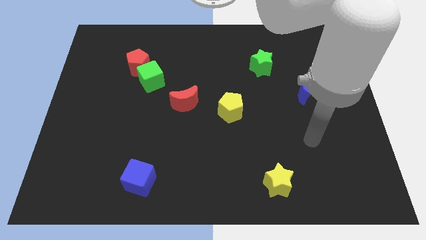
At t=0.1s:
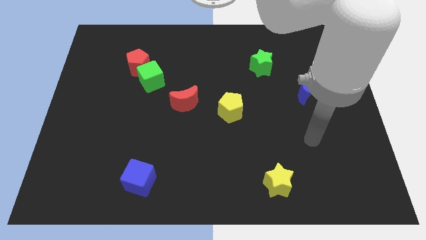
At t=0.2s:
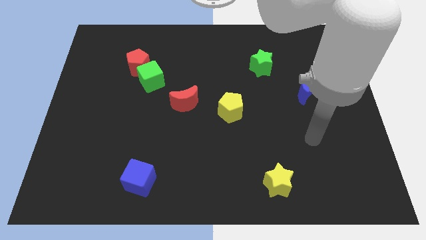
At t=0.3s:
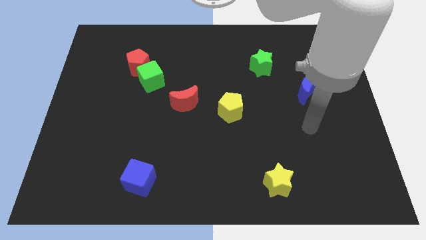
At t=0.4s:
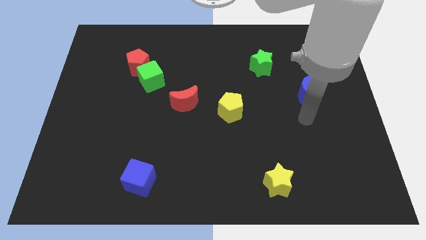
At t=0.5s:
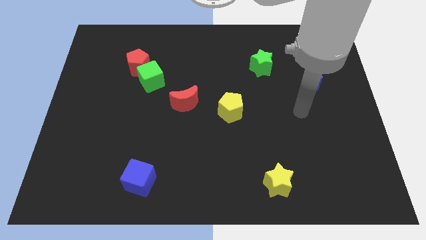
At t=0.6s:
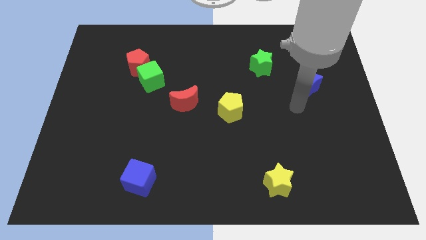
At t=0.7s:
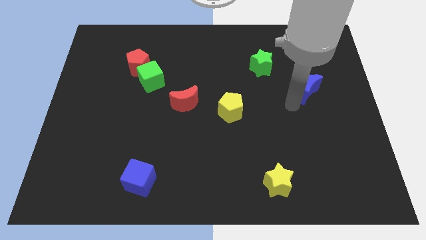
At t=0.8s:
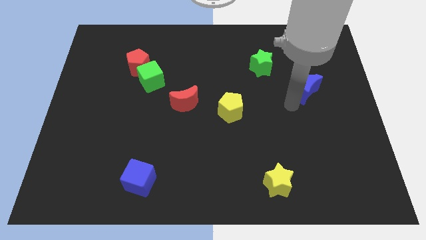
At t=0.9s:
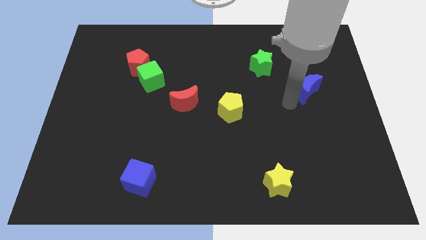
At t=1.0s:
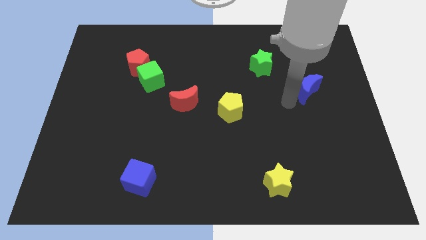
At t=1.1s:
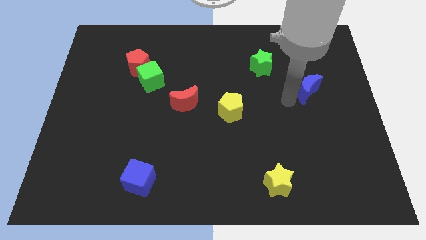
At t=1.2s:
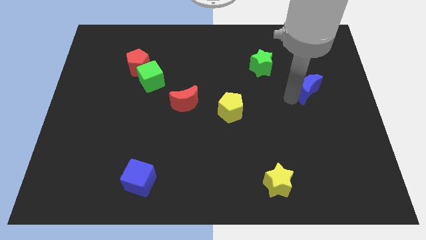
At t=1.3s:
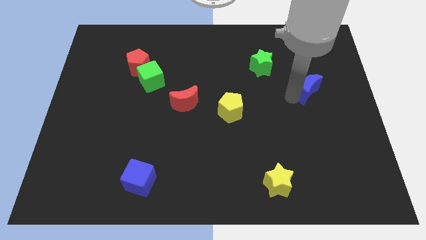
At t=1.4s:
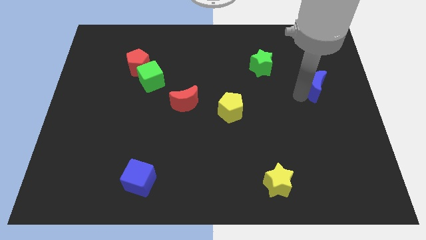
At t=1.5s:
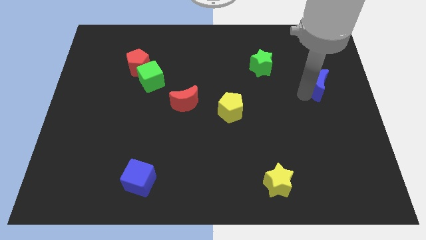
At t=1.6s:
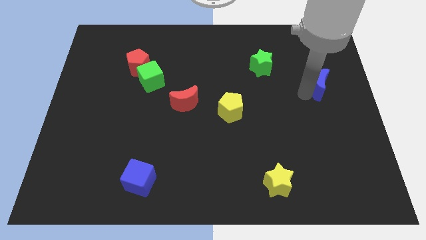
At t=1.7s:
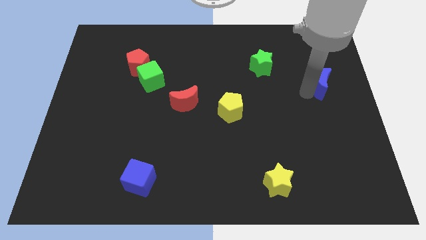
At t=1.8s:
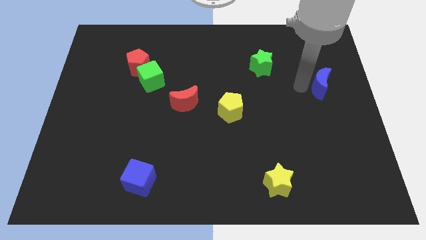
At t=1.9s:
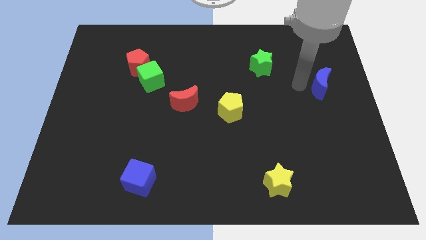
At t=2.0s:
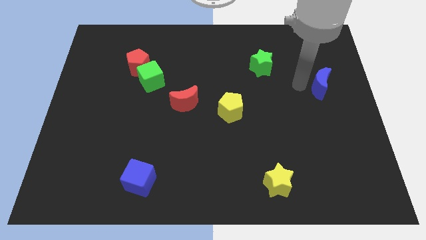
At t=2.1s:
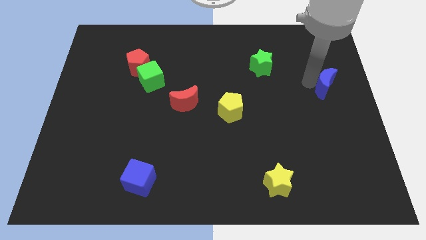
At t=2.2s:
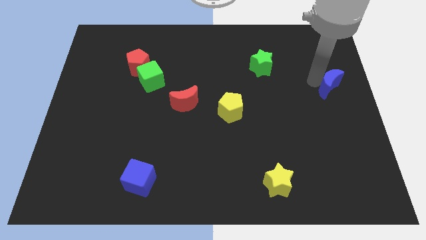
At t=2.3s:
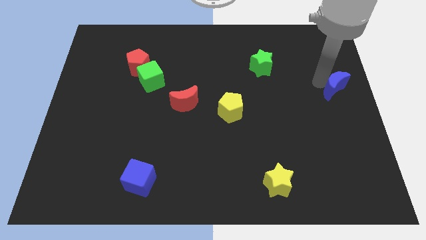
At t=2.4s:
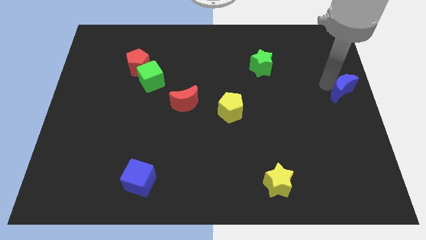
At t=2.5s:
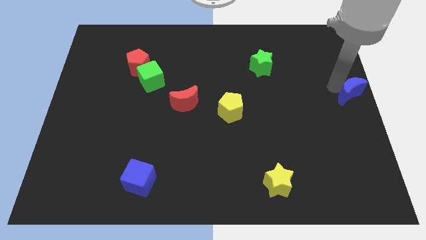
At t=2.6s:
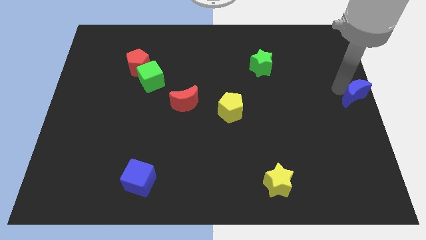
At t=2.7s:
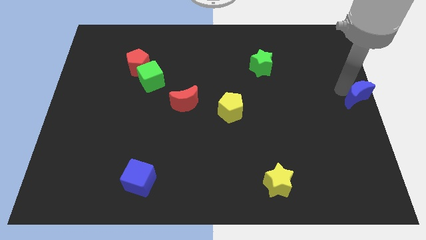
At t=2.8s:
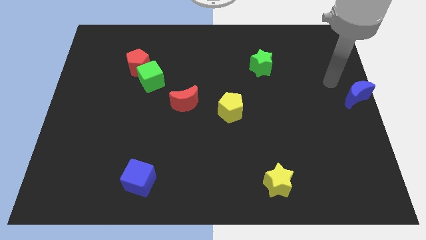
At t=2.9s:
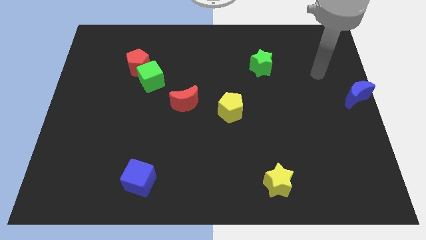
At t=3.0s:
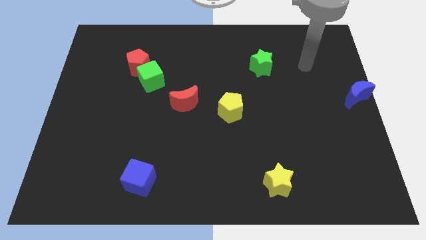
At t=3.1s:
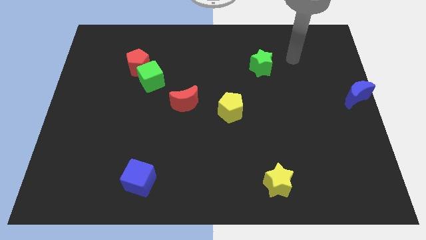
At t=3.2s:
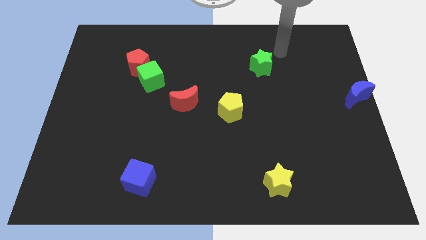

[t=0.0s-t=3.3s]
drag blue moon towards middle right of the board

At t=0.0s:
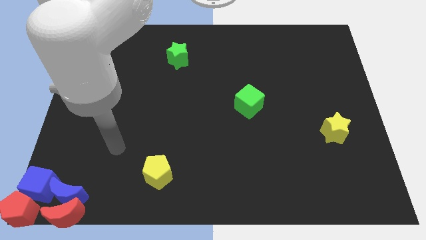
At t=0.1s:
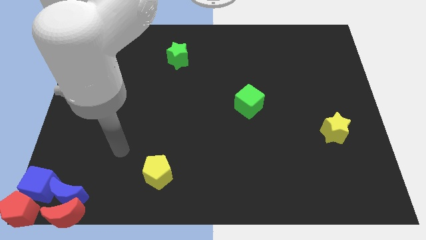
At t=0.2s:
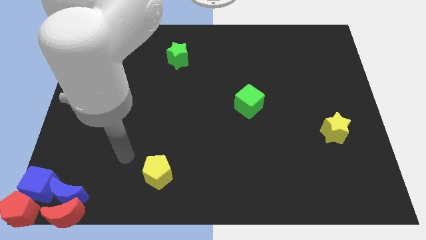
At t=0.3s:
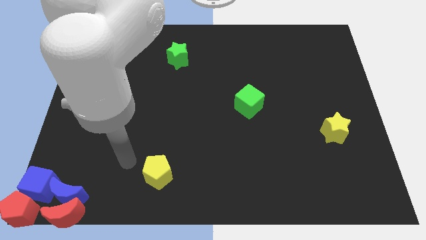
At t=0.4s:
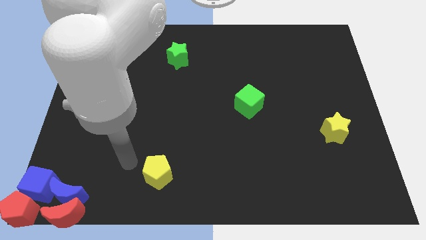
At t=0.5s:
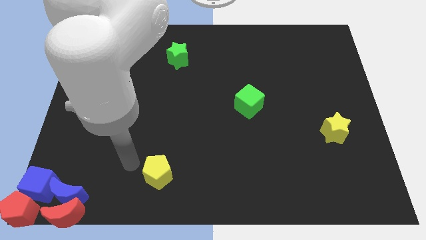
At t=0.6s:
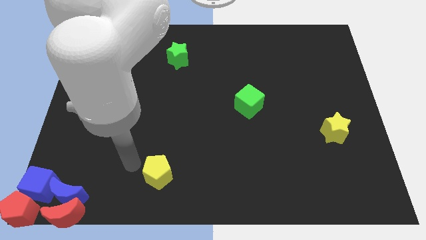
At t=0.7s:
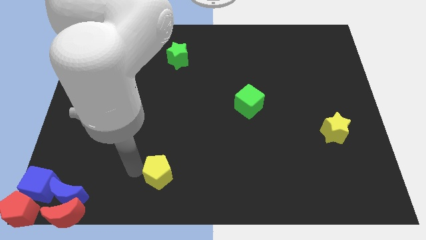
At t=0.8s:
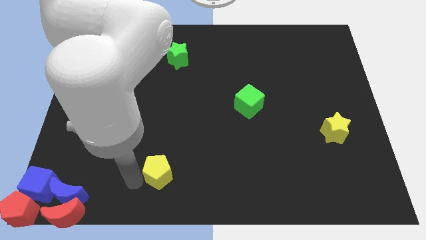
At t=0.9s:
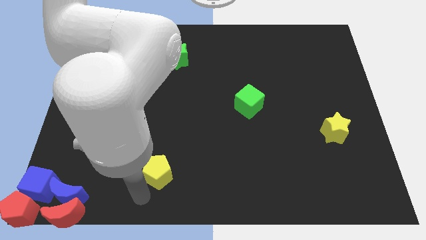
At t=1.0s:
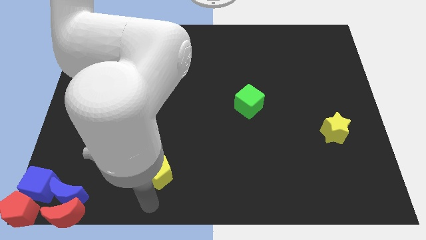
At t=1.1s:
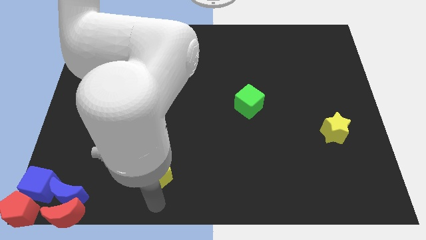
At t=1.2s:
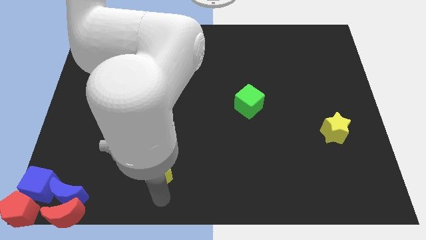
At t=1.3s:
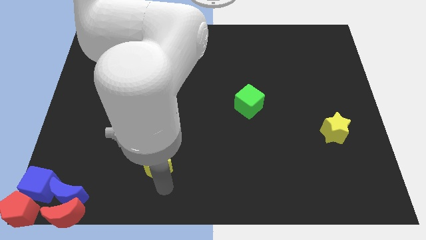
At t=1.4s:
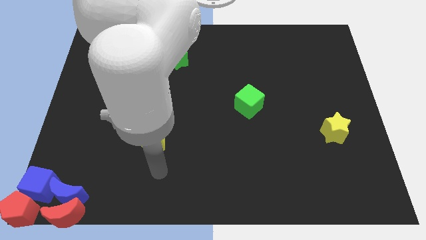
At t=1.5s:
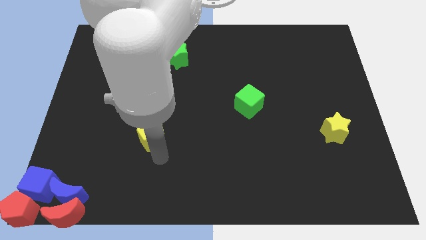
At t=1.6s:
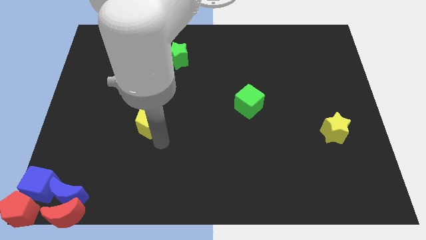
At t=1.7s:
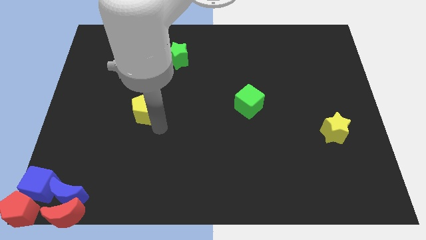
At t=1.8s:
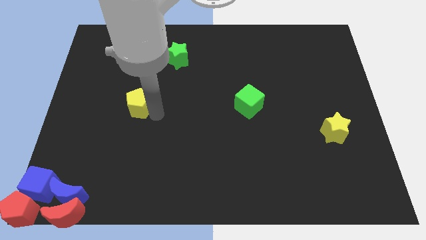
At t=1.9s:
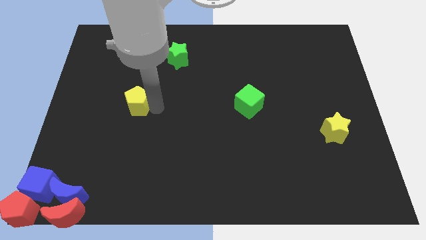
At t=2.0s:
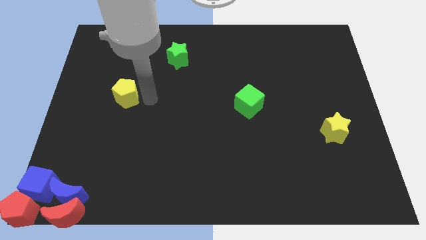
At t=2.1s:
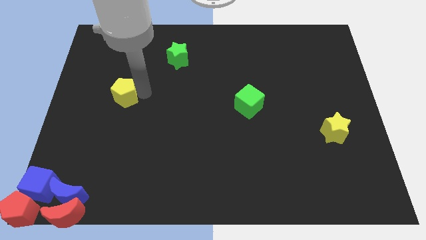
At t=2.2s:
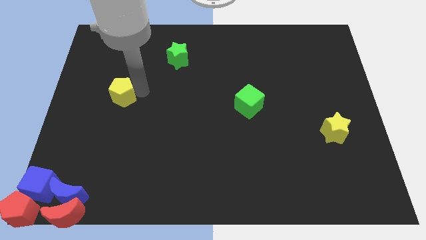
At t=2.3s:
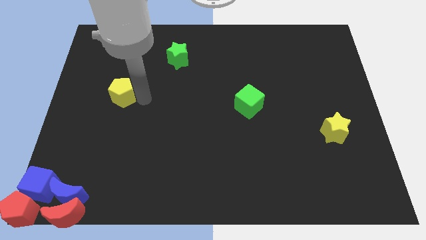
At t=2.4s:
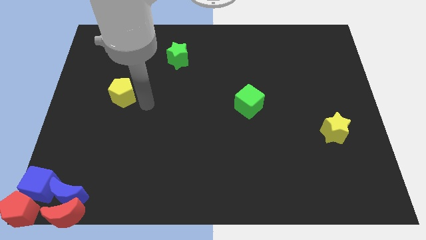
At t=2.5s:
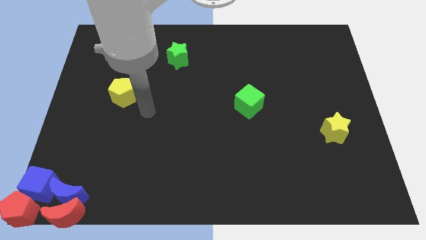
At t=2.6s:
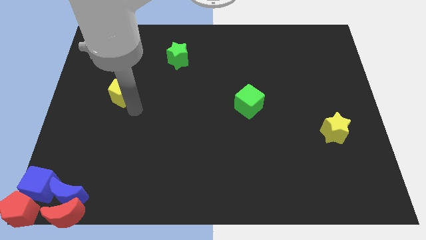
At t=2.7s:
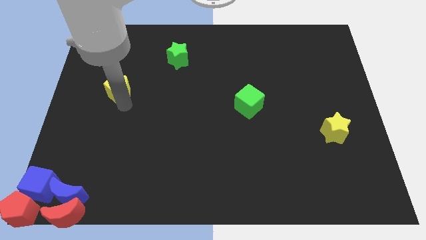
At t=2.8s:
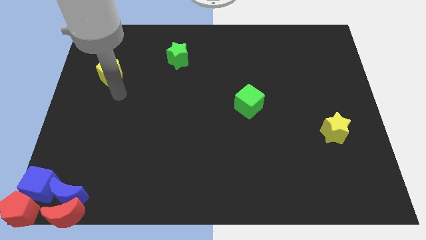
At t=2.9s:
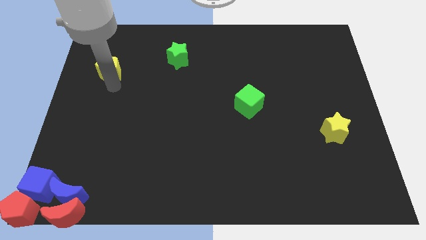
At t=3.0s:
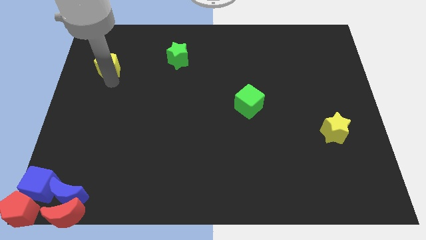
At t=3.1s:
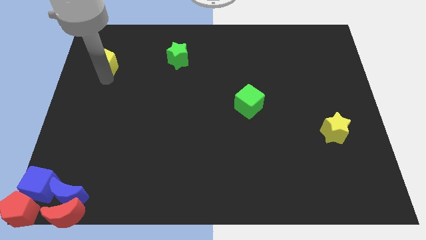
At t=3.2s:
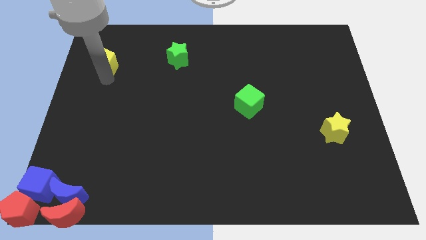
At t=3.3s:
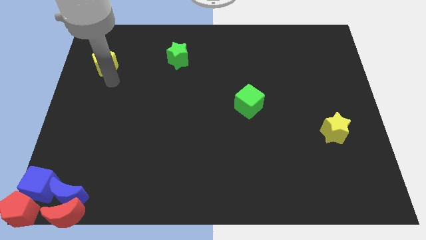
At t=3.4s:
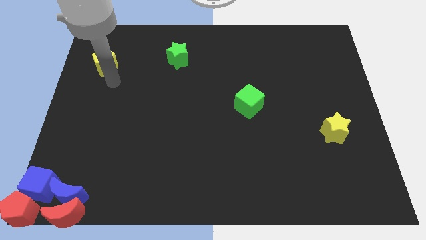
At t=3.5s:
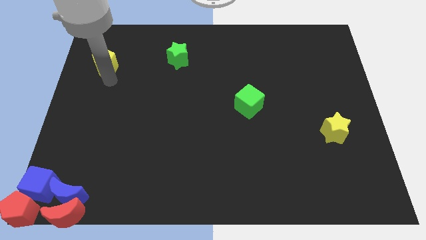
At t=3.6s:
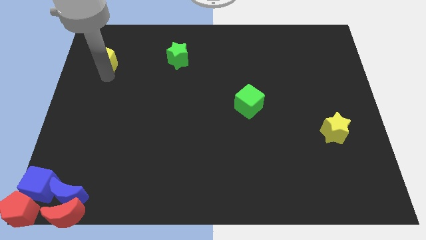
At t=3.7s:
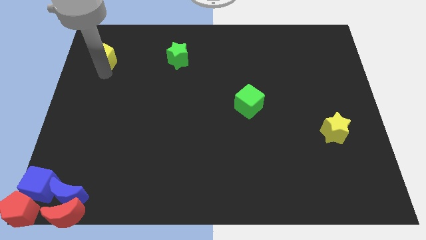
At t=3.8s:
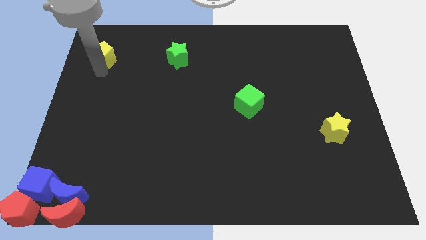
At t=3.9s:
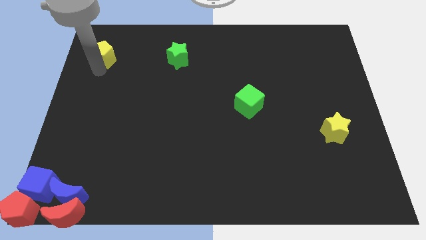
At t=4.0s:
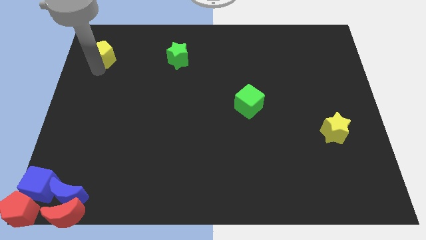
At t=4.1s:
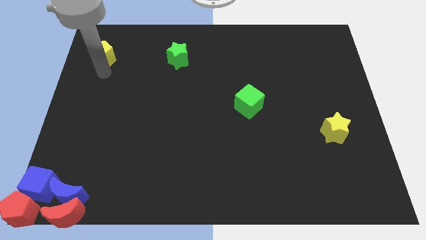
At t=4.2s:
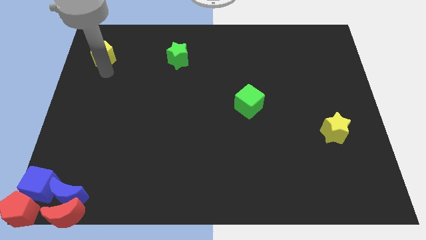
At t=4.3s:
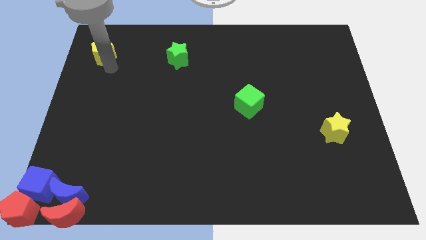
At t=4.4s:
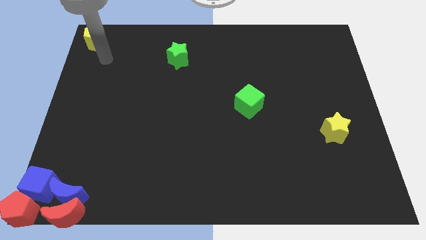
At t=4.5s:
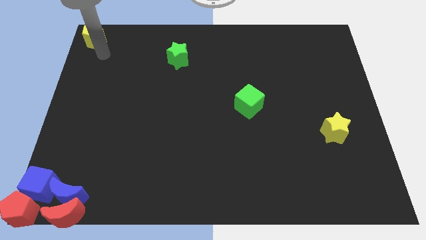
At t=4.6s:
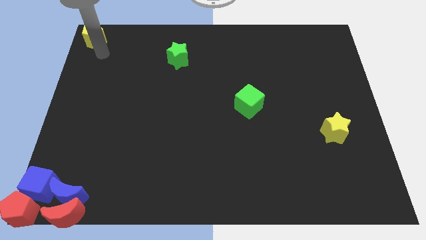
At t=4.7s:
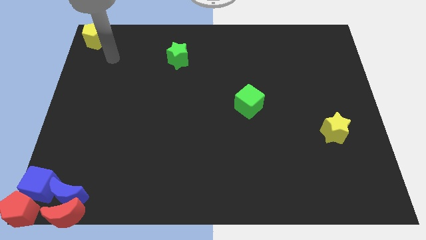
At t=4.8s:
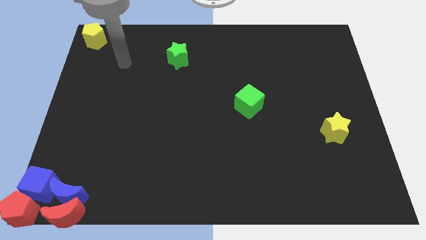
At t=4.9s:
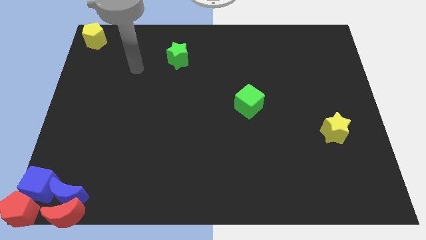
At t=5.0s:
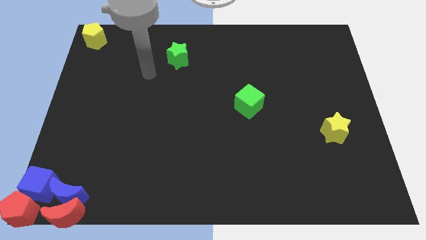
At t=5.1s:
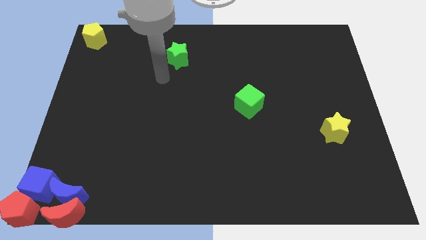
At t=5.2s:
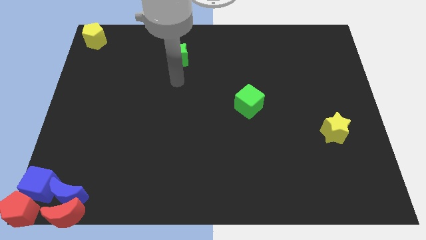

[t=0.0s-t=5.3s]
move the yellow pentagon to the top left of the board

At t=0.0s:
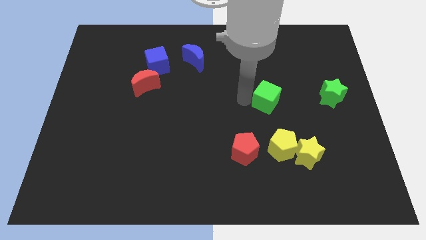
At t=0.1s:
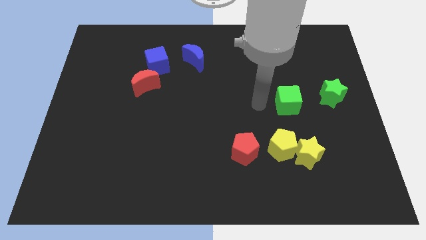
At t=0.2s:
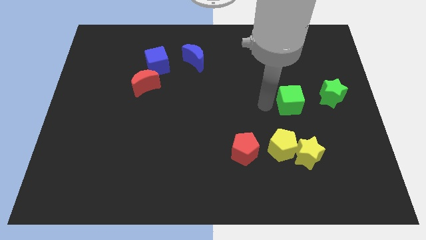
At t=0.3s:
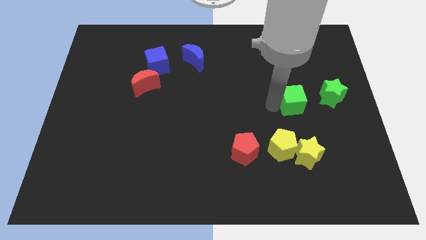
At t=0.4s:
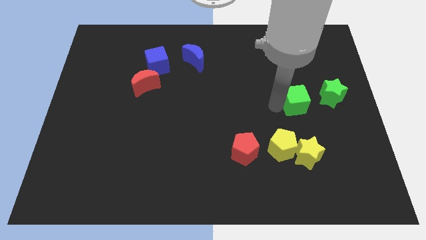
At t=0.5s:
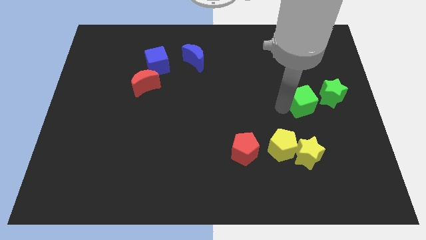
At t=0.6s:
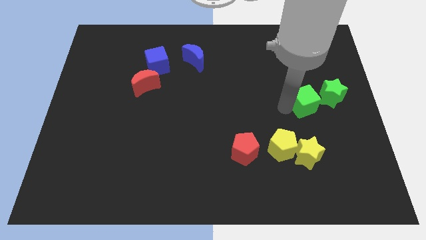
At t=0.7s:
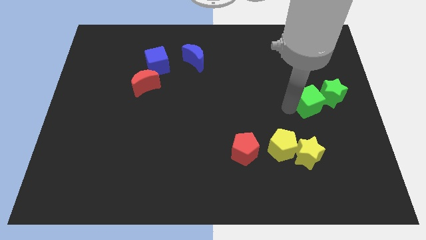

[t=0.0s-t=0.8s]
push green cube above yellow star
